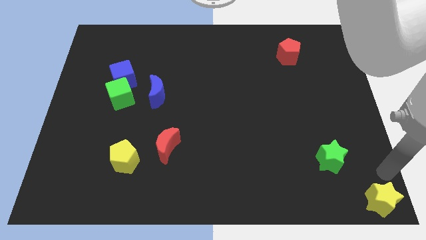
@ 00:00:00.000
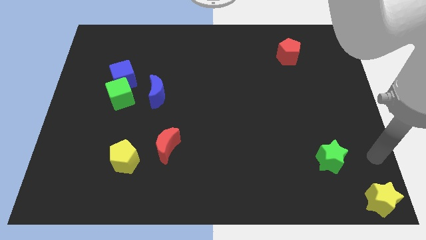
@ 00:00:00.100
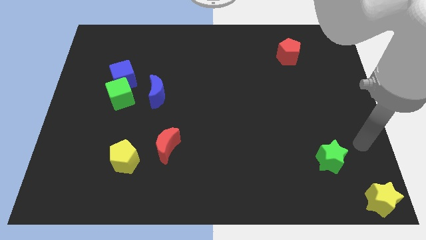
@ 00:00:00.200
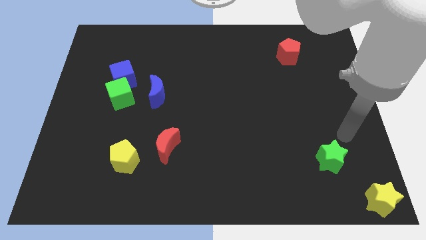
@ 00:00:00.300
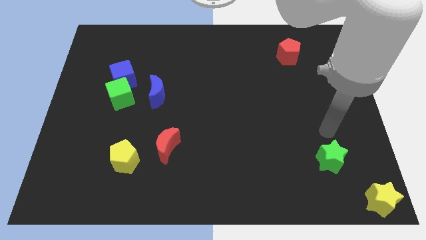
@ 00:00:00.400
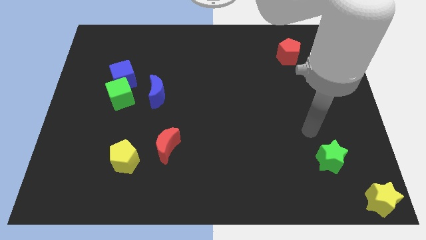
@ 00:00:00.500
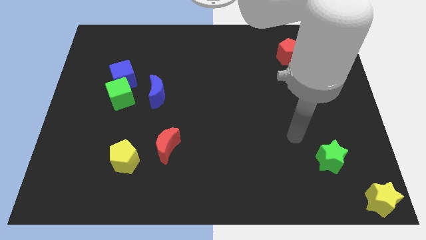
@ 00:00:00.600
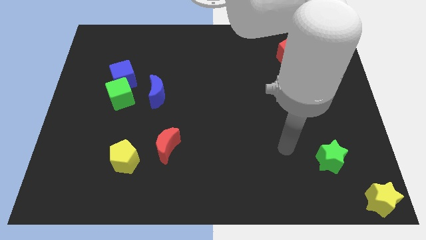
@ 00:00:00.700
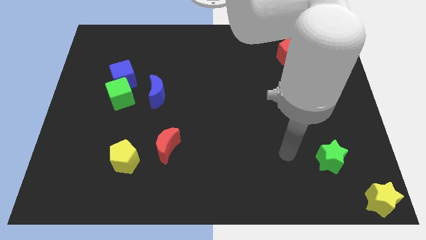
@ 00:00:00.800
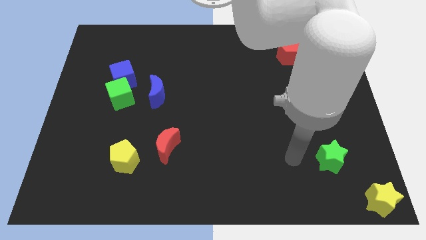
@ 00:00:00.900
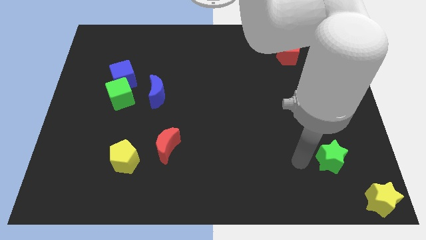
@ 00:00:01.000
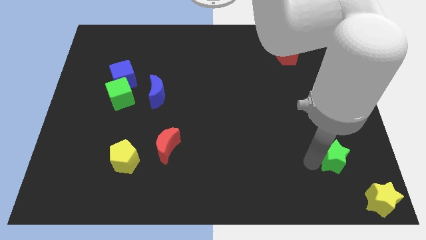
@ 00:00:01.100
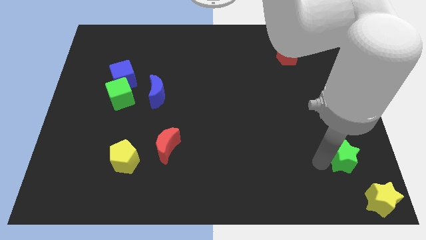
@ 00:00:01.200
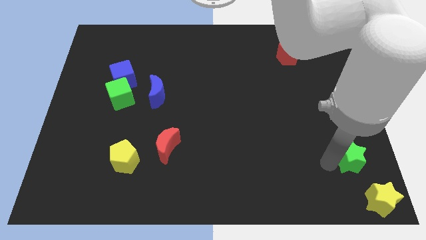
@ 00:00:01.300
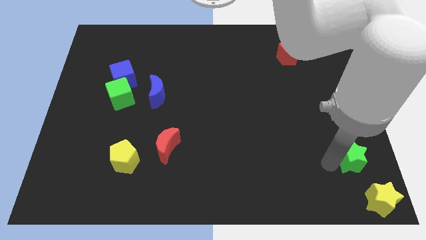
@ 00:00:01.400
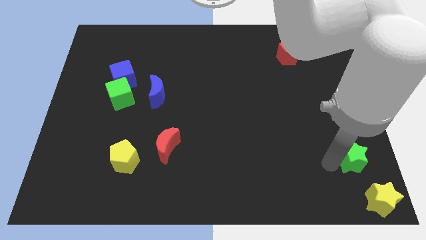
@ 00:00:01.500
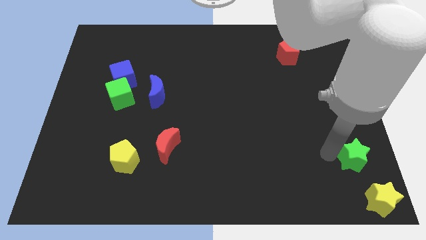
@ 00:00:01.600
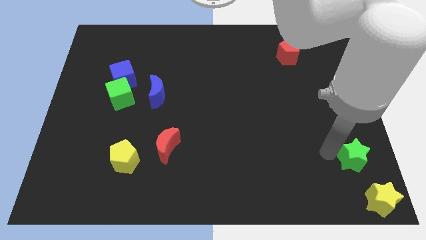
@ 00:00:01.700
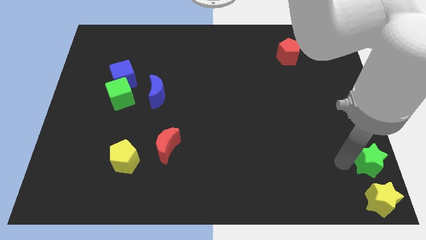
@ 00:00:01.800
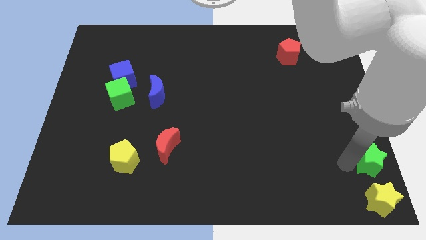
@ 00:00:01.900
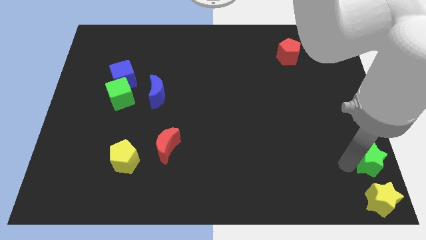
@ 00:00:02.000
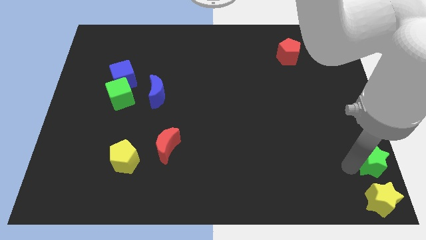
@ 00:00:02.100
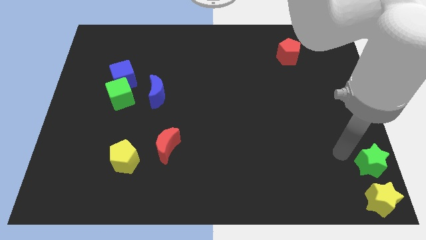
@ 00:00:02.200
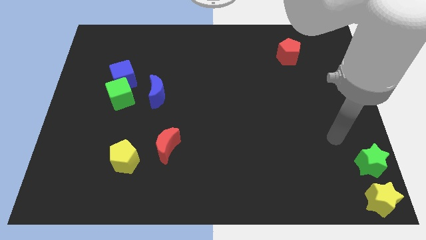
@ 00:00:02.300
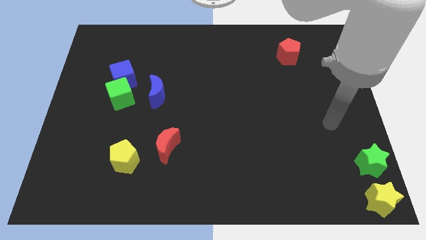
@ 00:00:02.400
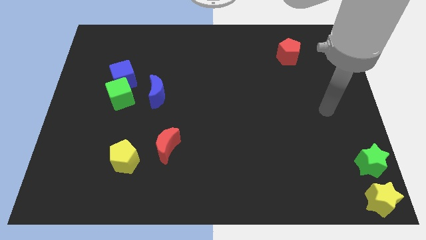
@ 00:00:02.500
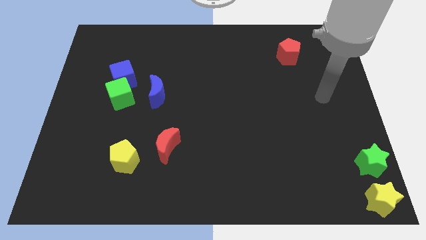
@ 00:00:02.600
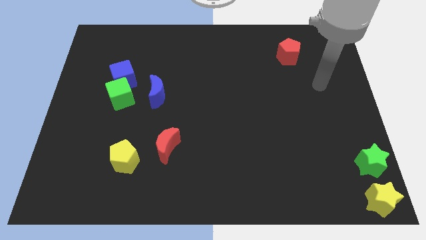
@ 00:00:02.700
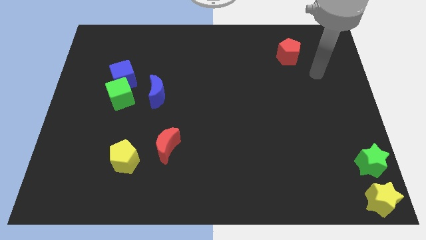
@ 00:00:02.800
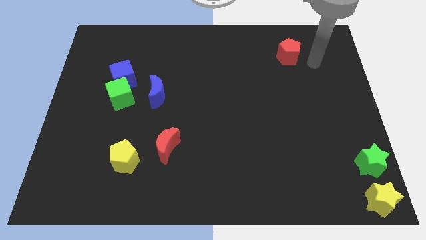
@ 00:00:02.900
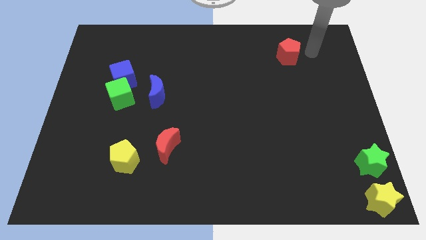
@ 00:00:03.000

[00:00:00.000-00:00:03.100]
place the green star on top of the yellow star

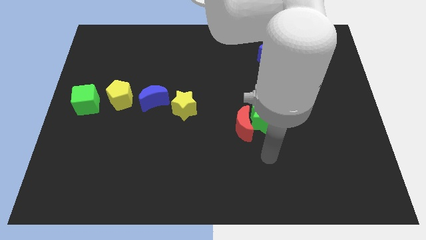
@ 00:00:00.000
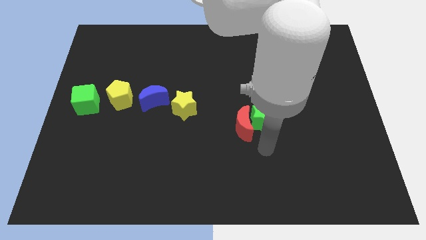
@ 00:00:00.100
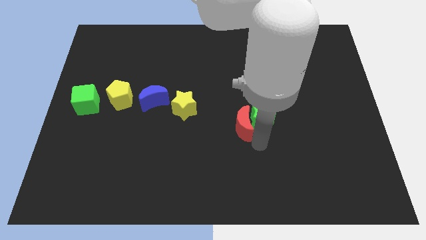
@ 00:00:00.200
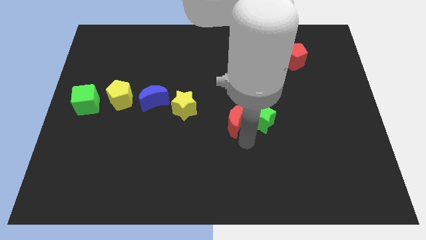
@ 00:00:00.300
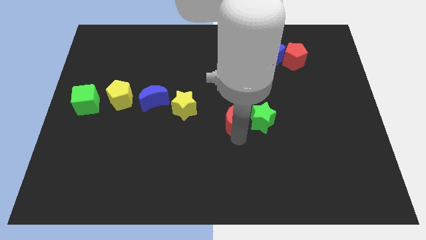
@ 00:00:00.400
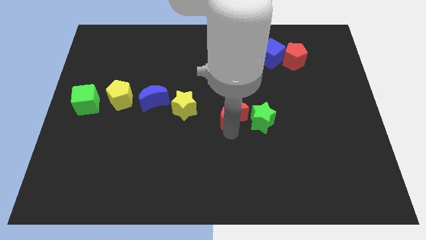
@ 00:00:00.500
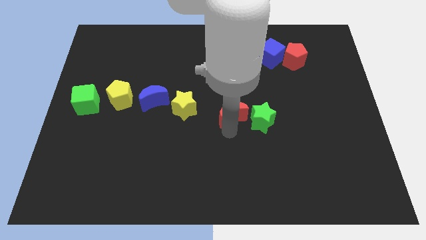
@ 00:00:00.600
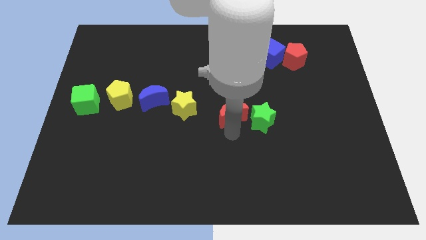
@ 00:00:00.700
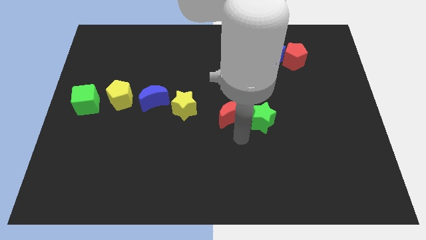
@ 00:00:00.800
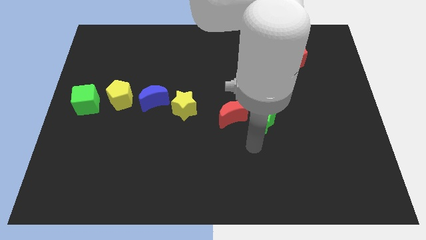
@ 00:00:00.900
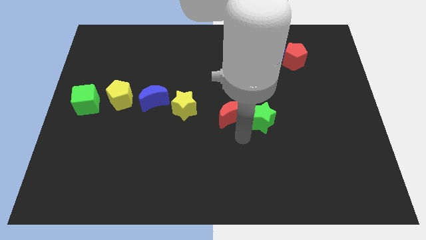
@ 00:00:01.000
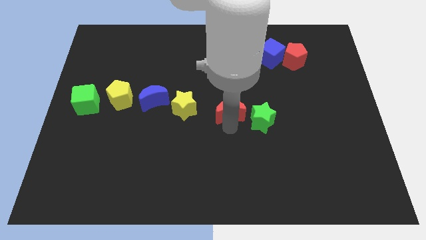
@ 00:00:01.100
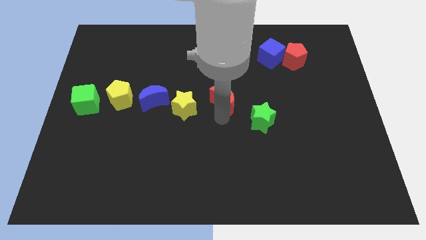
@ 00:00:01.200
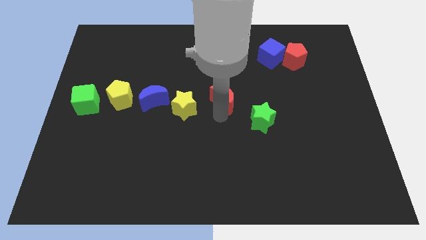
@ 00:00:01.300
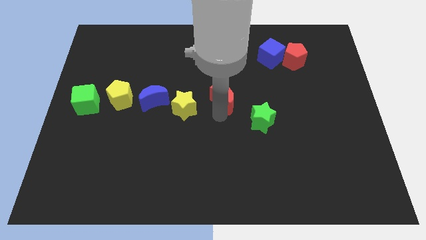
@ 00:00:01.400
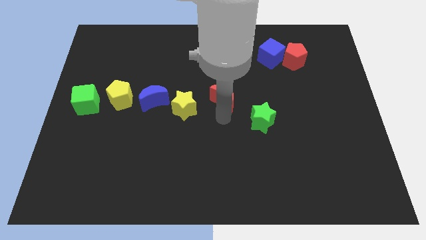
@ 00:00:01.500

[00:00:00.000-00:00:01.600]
place the red moon to the right of the yellow star

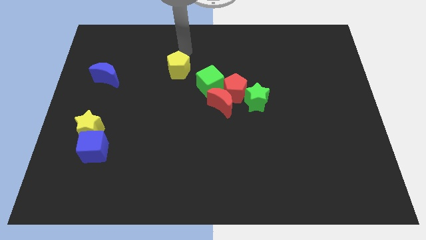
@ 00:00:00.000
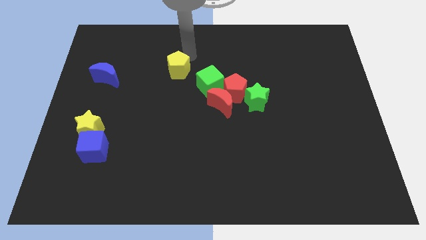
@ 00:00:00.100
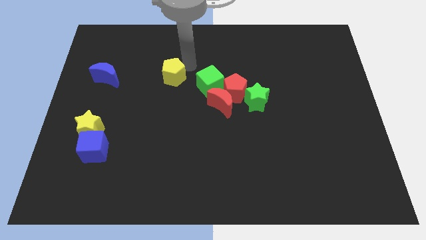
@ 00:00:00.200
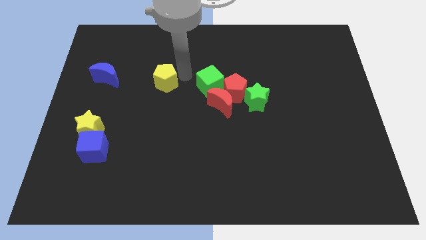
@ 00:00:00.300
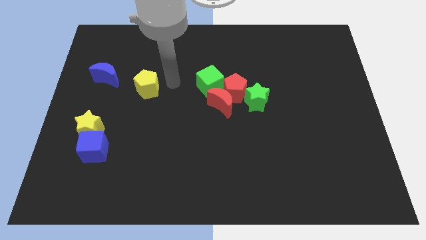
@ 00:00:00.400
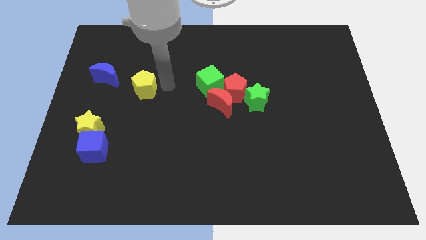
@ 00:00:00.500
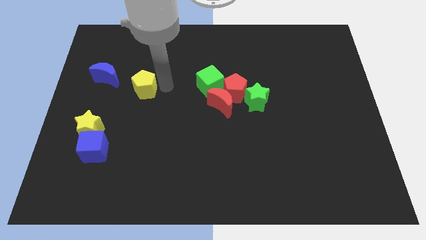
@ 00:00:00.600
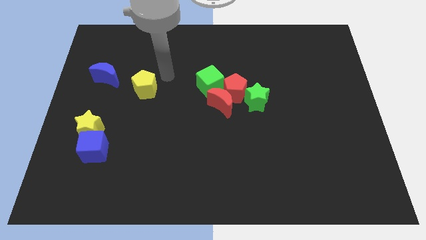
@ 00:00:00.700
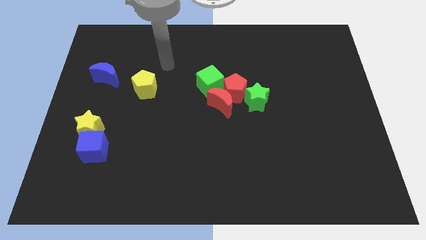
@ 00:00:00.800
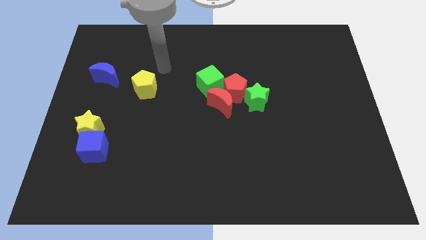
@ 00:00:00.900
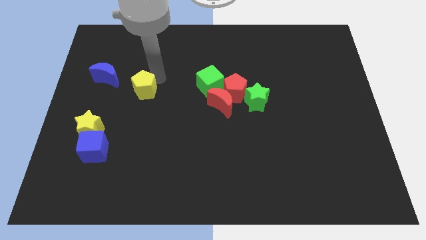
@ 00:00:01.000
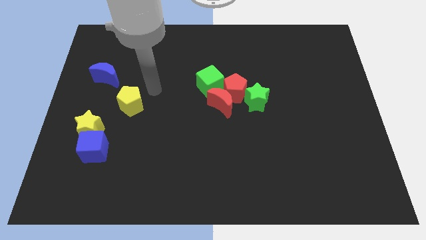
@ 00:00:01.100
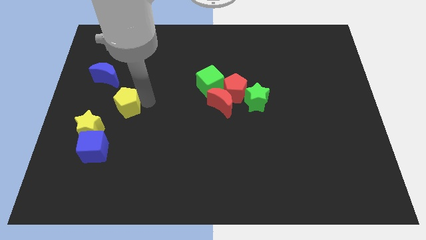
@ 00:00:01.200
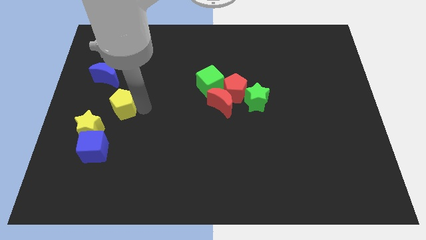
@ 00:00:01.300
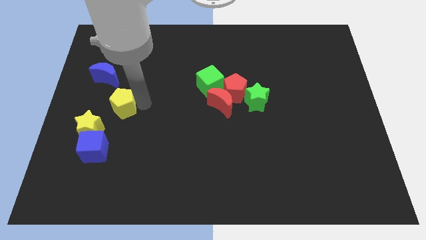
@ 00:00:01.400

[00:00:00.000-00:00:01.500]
move the yellow pentagon down slightly

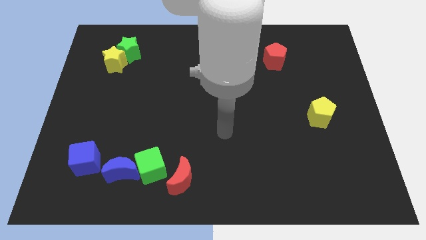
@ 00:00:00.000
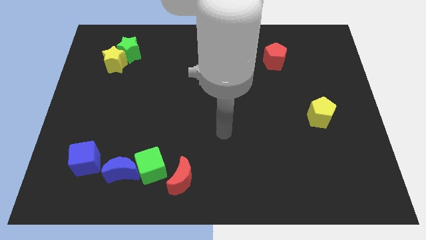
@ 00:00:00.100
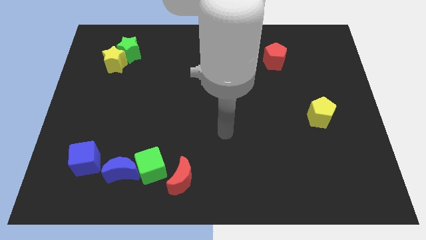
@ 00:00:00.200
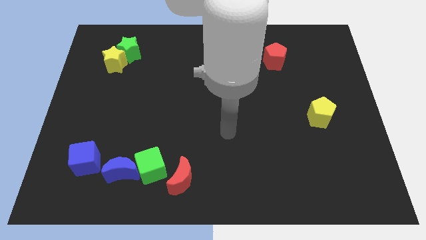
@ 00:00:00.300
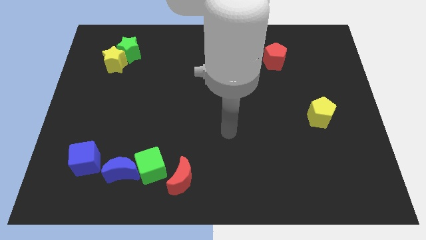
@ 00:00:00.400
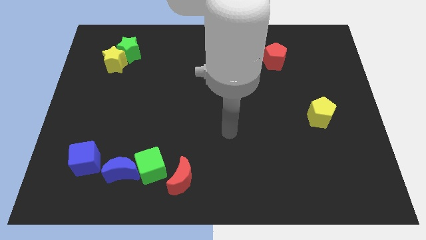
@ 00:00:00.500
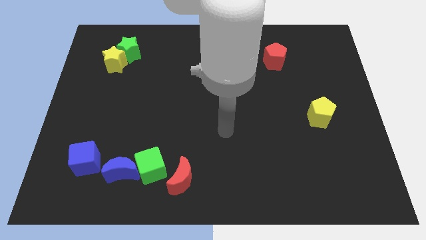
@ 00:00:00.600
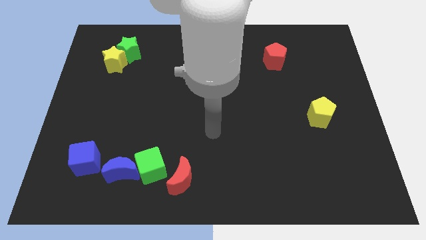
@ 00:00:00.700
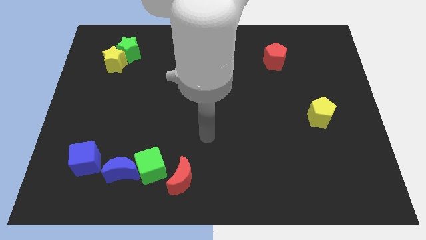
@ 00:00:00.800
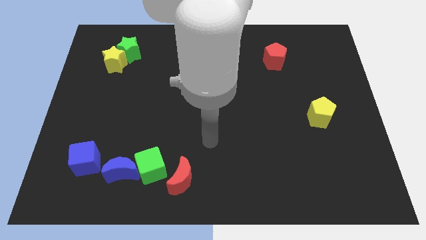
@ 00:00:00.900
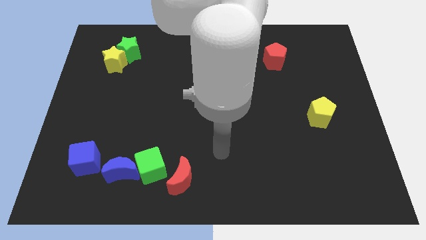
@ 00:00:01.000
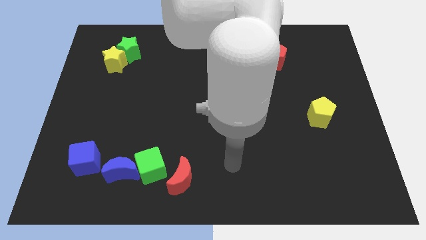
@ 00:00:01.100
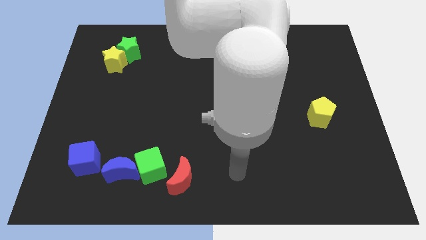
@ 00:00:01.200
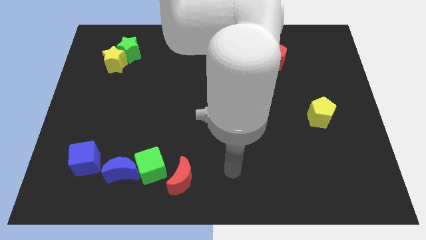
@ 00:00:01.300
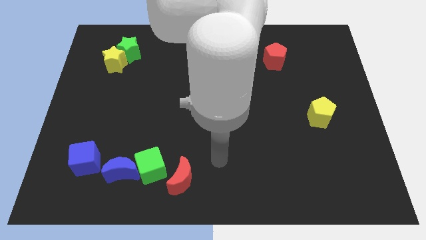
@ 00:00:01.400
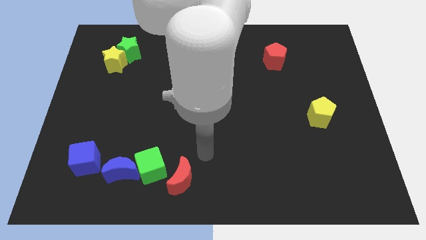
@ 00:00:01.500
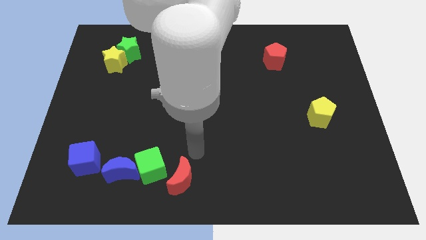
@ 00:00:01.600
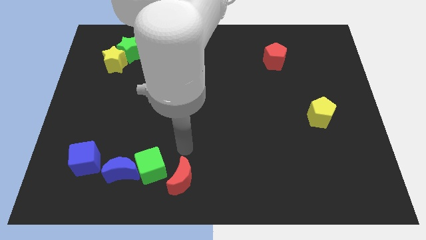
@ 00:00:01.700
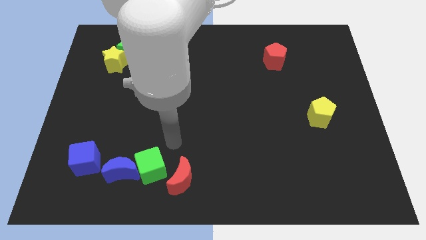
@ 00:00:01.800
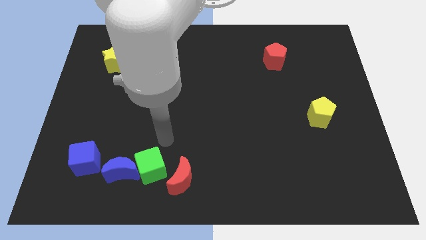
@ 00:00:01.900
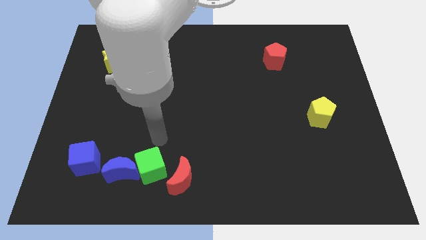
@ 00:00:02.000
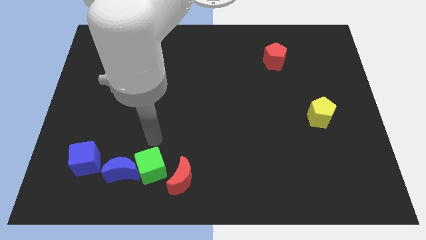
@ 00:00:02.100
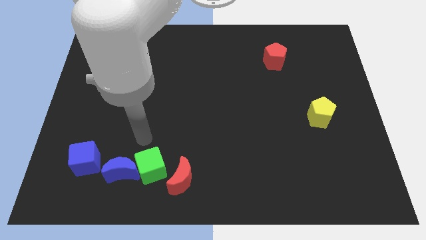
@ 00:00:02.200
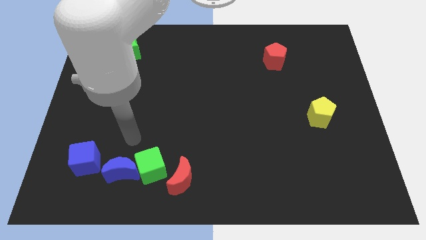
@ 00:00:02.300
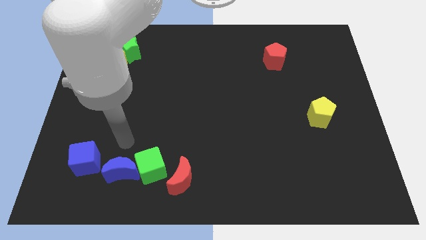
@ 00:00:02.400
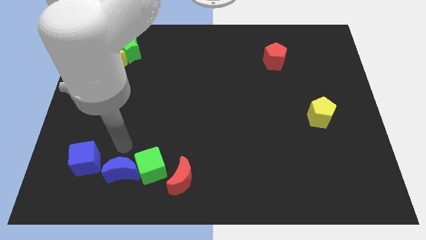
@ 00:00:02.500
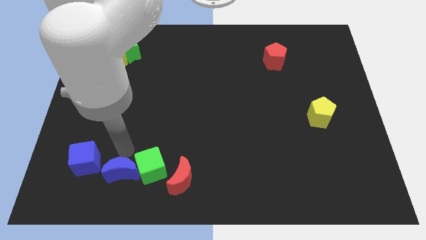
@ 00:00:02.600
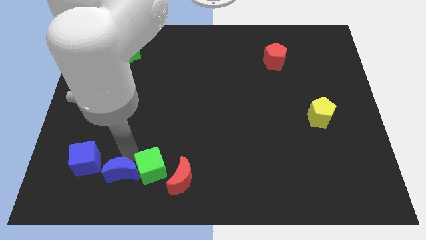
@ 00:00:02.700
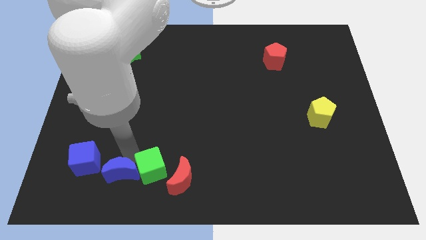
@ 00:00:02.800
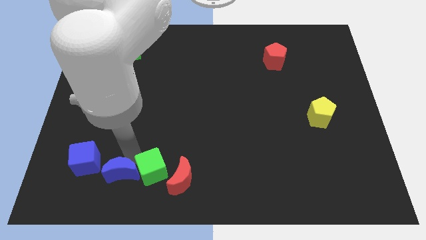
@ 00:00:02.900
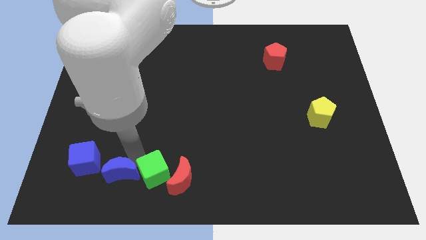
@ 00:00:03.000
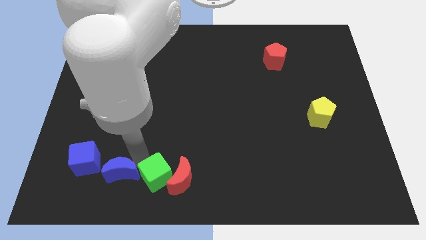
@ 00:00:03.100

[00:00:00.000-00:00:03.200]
move the green cube slightly into the red moon
